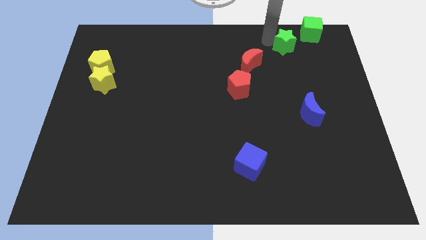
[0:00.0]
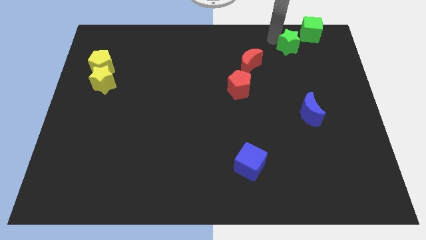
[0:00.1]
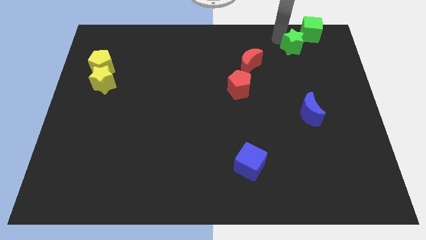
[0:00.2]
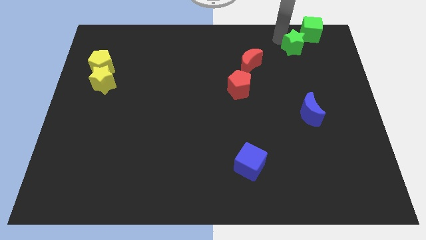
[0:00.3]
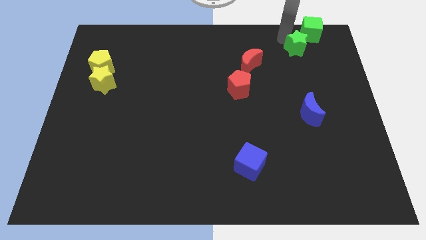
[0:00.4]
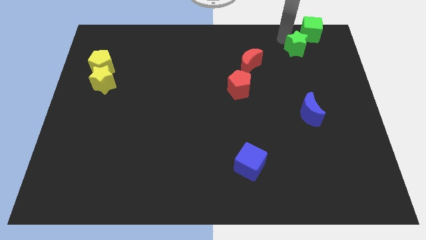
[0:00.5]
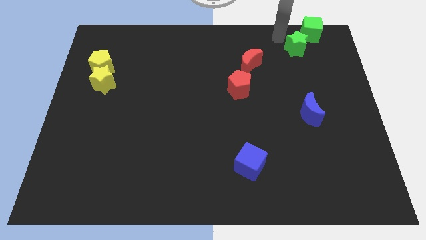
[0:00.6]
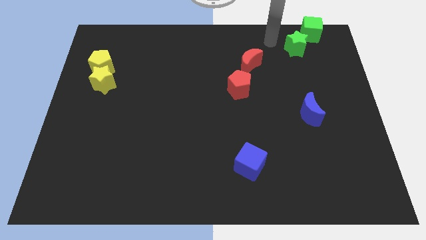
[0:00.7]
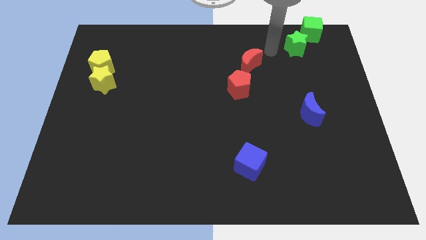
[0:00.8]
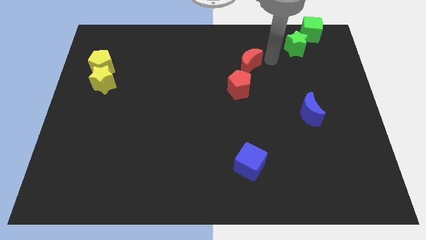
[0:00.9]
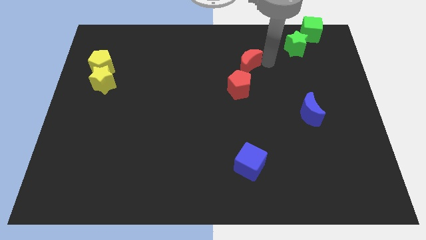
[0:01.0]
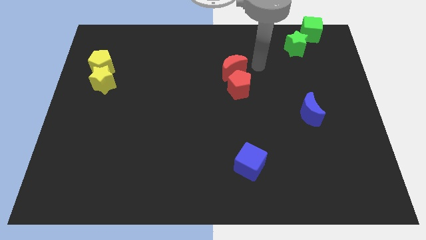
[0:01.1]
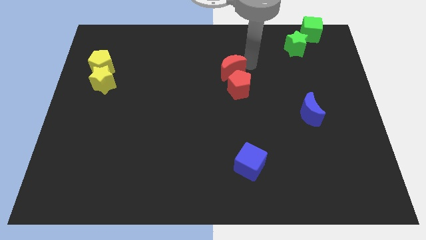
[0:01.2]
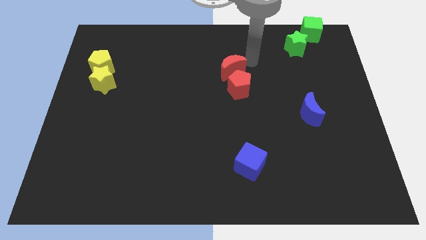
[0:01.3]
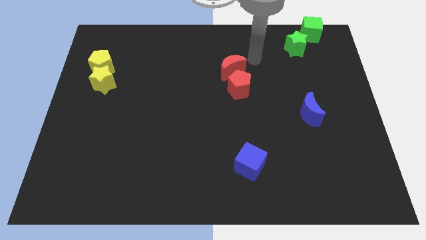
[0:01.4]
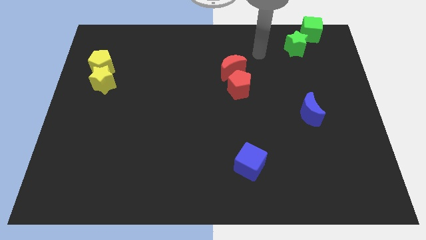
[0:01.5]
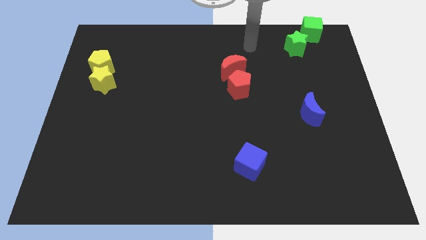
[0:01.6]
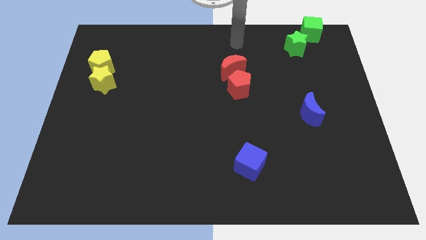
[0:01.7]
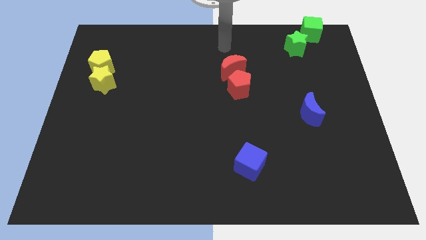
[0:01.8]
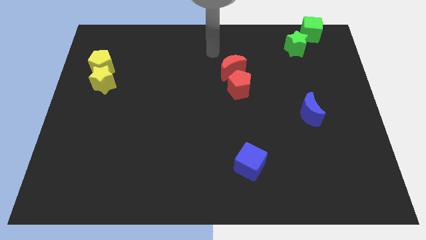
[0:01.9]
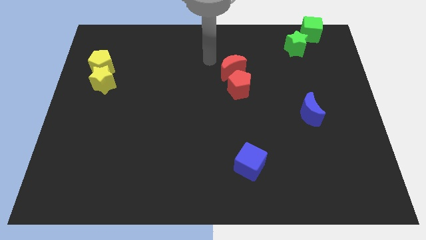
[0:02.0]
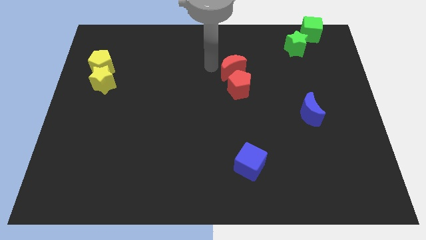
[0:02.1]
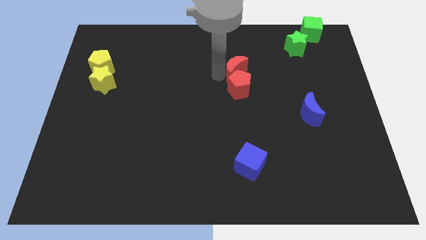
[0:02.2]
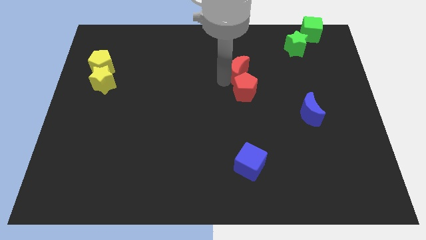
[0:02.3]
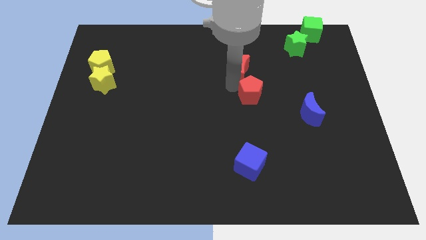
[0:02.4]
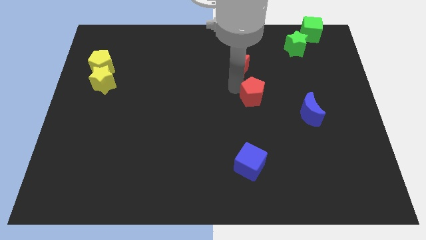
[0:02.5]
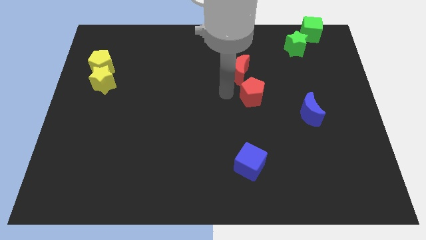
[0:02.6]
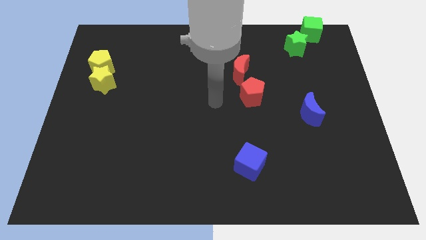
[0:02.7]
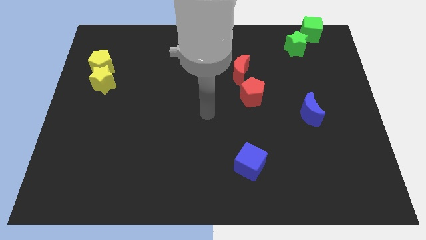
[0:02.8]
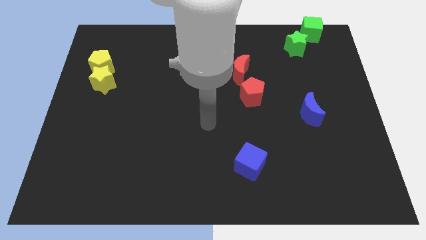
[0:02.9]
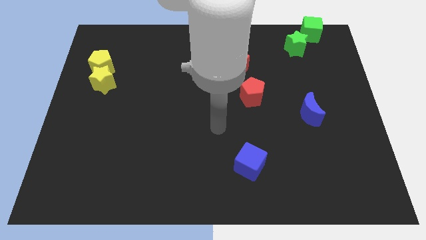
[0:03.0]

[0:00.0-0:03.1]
slightly touch the red pentagon and red moon

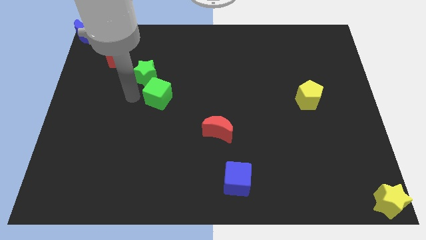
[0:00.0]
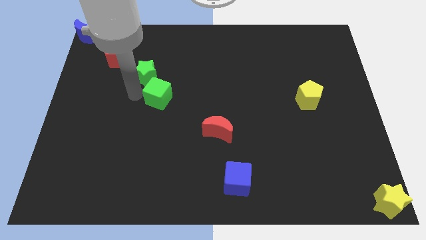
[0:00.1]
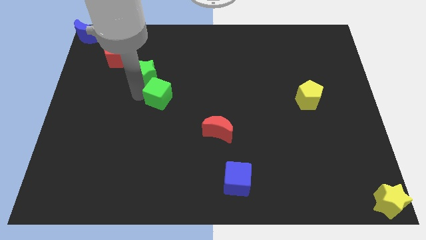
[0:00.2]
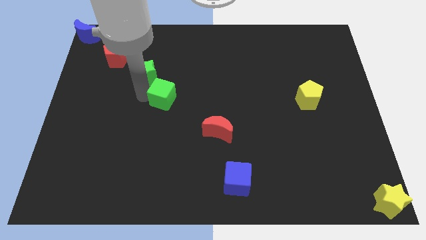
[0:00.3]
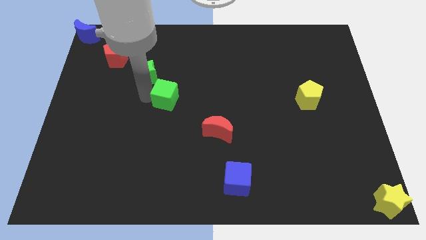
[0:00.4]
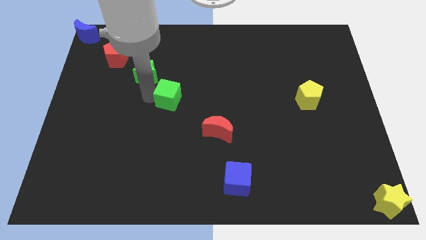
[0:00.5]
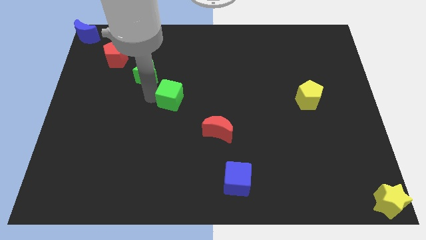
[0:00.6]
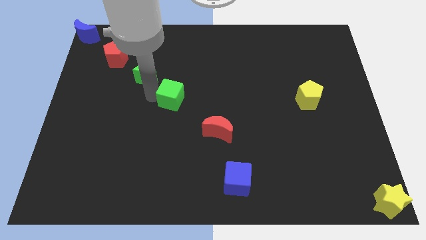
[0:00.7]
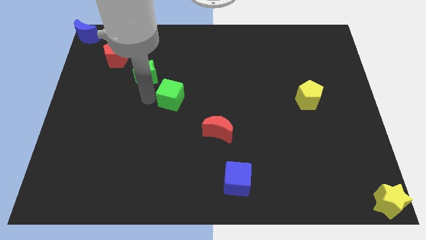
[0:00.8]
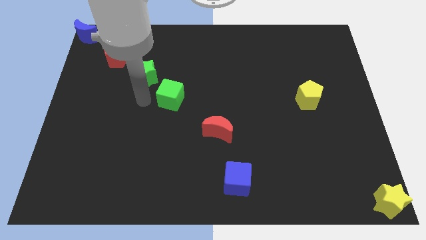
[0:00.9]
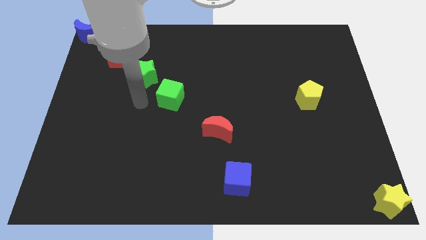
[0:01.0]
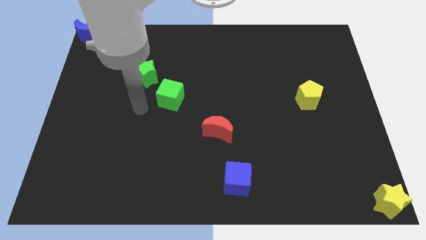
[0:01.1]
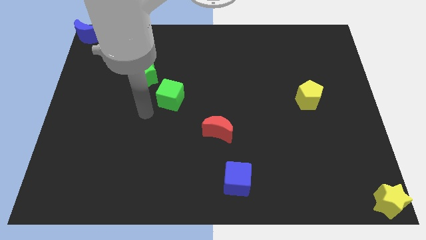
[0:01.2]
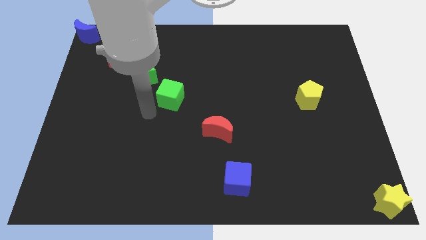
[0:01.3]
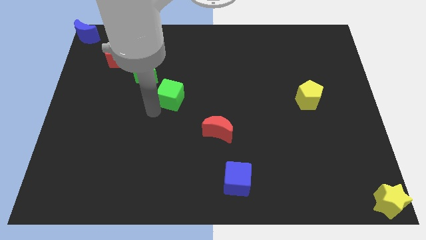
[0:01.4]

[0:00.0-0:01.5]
apart green cube and green star

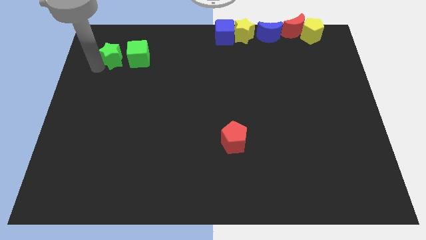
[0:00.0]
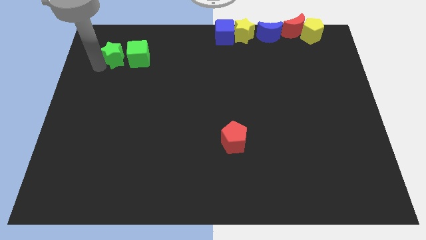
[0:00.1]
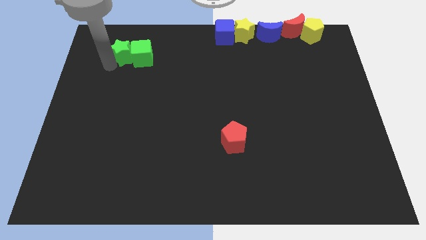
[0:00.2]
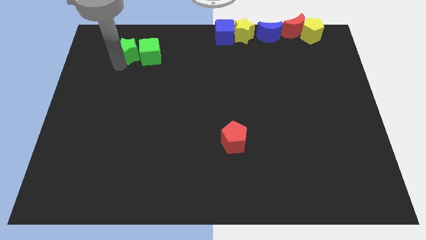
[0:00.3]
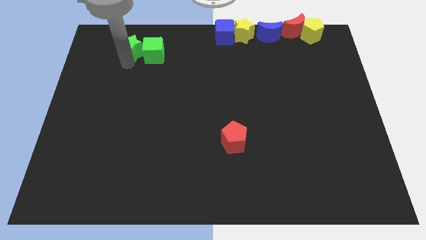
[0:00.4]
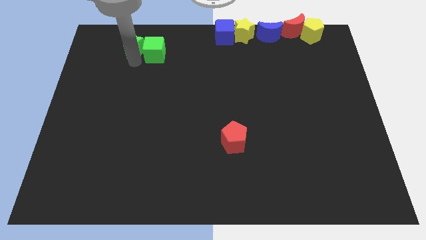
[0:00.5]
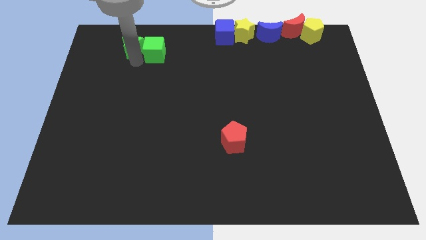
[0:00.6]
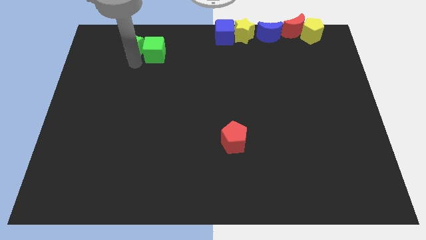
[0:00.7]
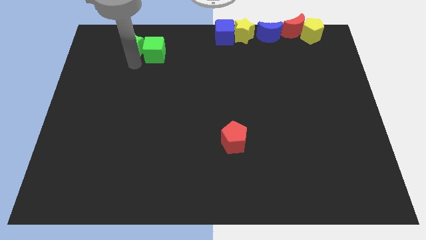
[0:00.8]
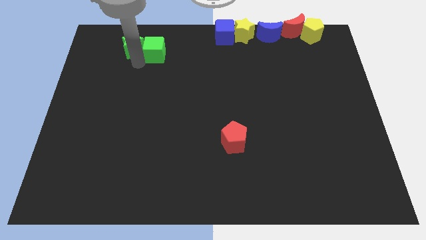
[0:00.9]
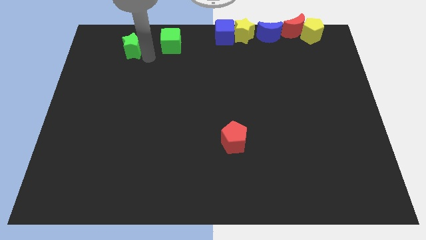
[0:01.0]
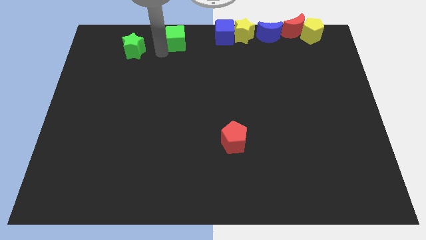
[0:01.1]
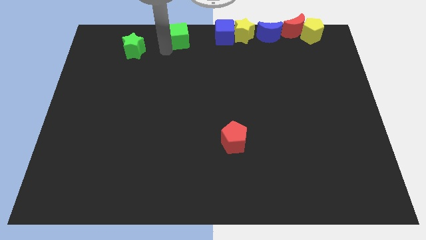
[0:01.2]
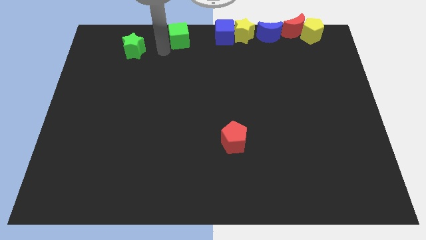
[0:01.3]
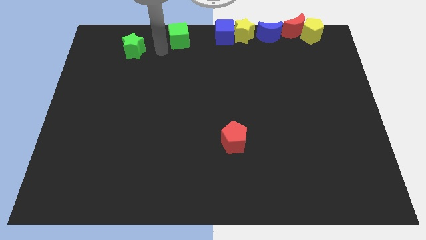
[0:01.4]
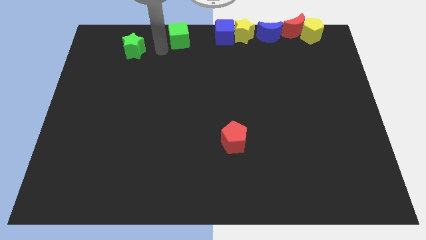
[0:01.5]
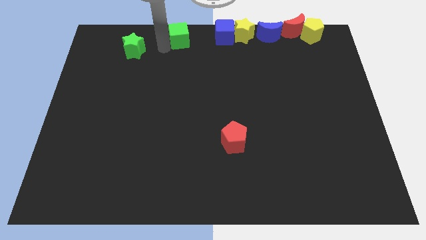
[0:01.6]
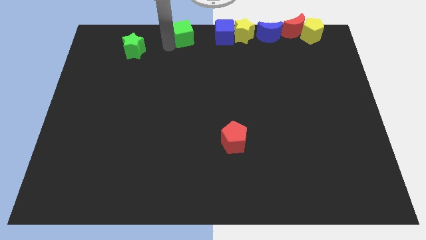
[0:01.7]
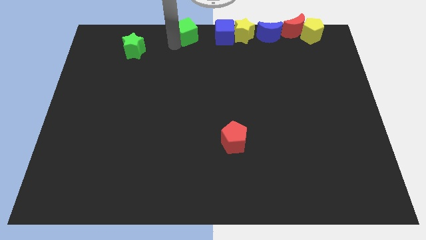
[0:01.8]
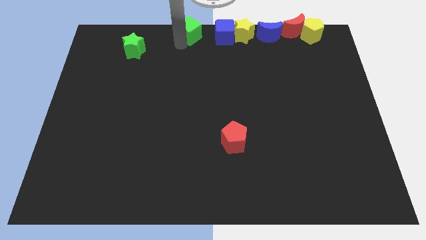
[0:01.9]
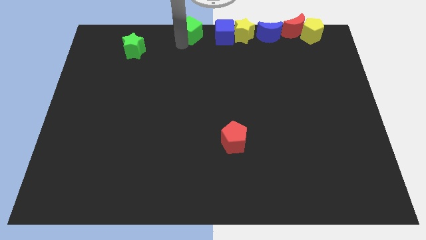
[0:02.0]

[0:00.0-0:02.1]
push the green cube towards the left of the blue cube

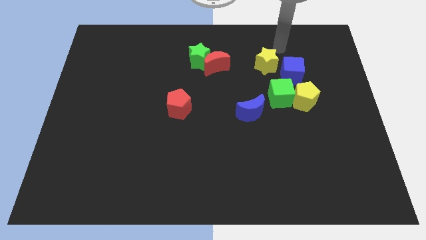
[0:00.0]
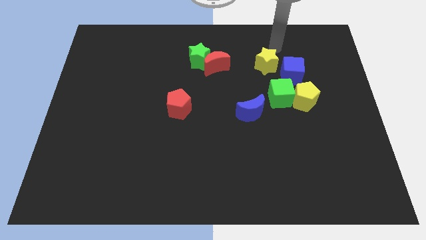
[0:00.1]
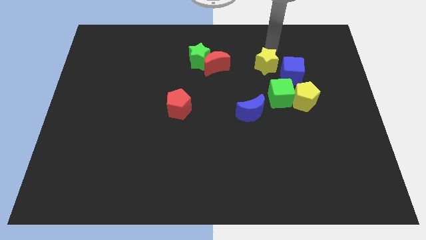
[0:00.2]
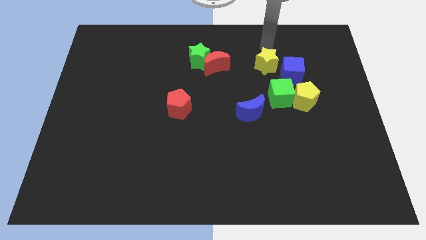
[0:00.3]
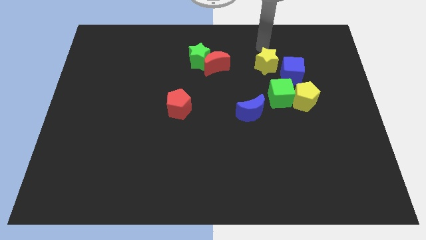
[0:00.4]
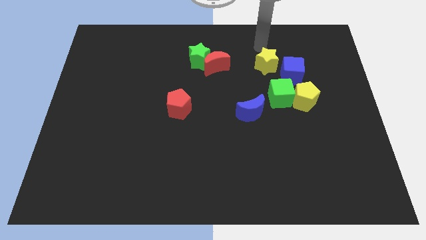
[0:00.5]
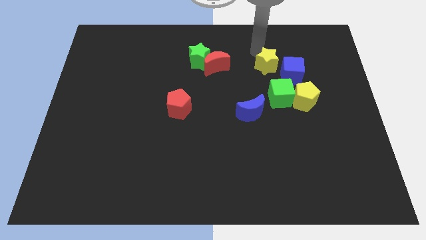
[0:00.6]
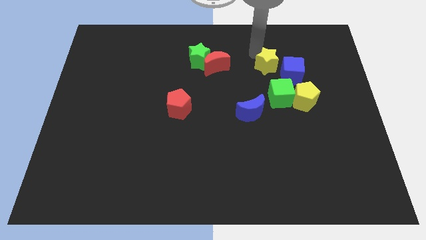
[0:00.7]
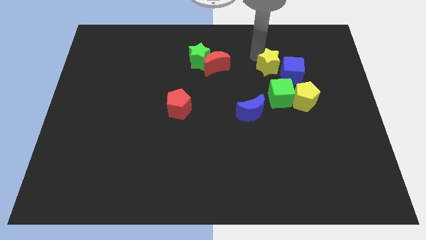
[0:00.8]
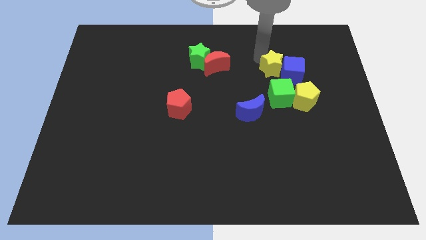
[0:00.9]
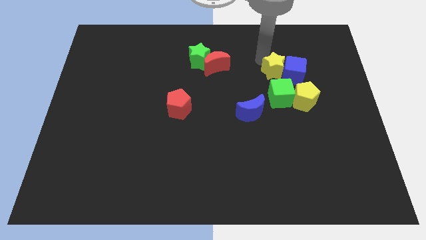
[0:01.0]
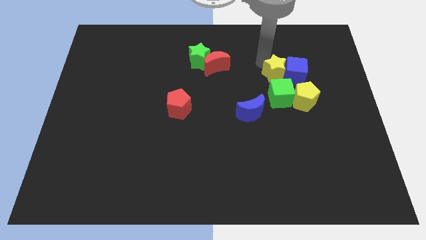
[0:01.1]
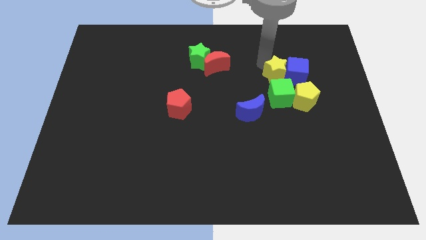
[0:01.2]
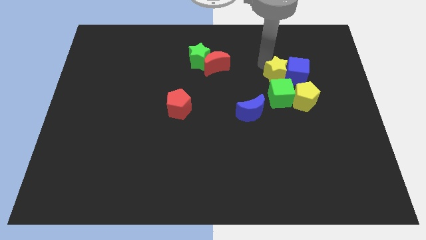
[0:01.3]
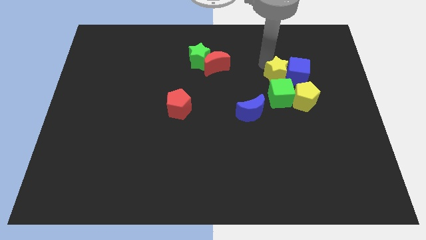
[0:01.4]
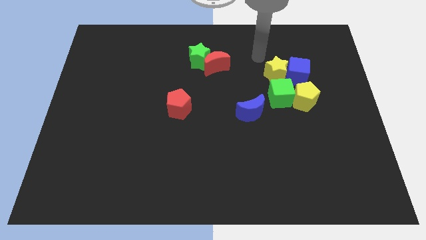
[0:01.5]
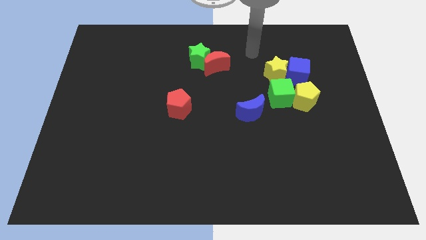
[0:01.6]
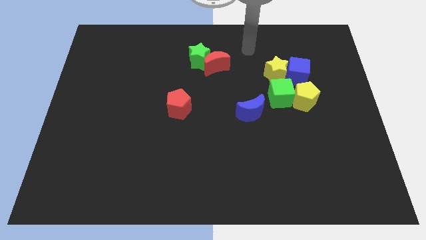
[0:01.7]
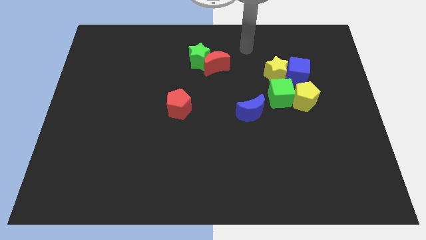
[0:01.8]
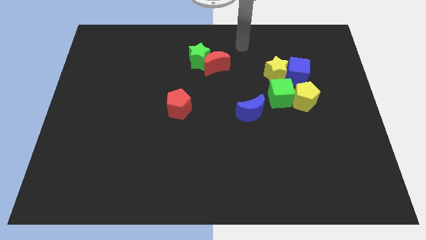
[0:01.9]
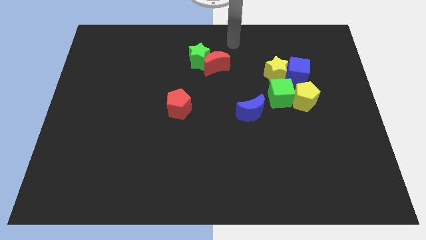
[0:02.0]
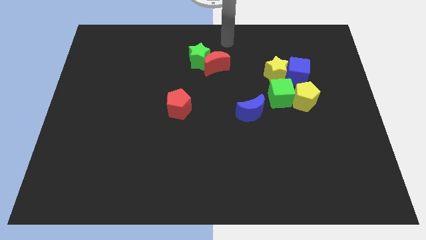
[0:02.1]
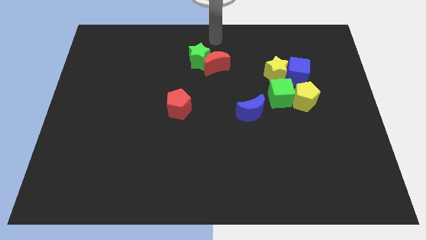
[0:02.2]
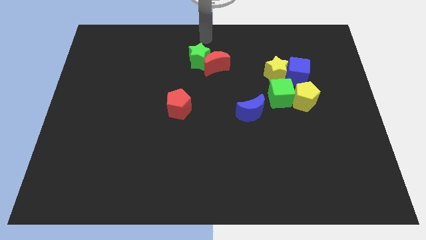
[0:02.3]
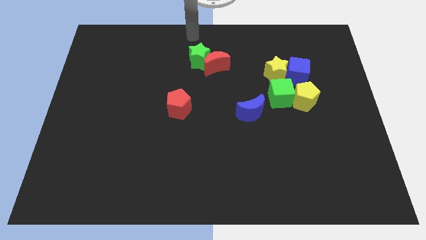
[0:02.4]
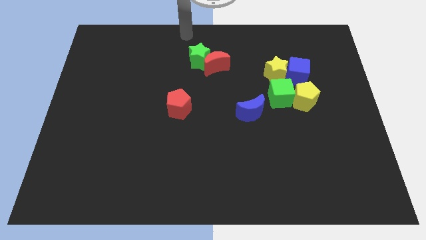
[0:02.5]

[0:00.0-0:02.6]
push the yellow star slightly towards the green cube
